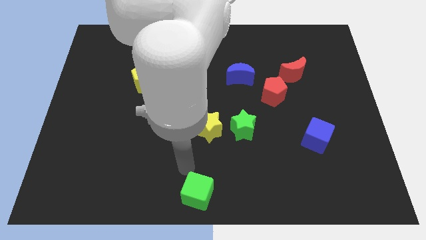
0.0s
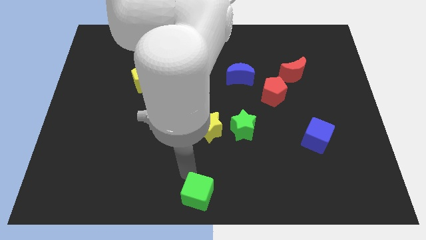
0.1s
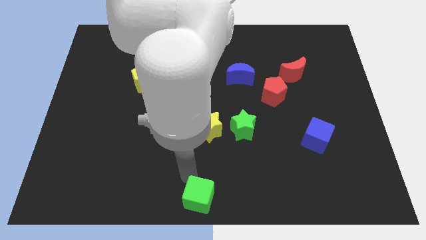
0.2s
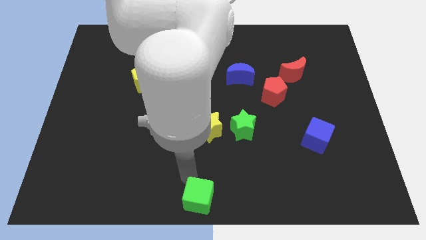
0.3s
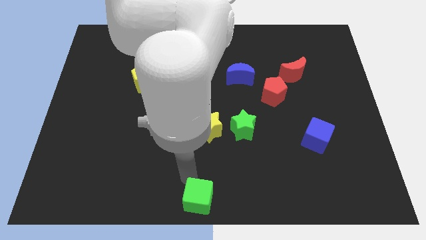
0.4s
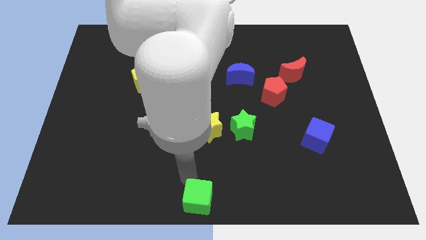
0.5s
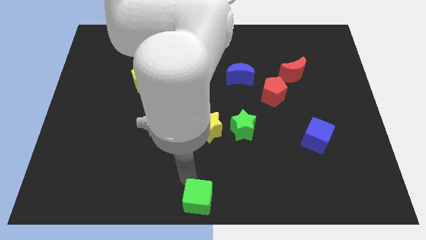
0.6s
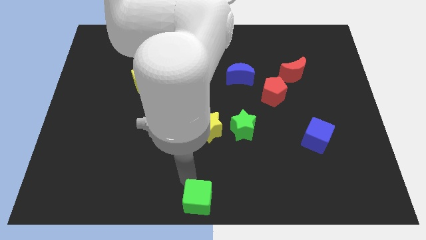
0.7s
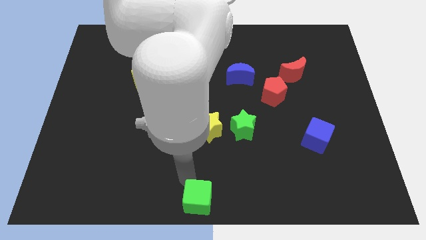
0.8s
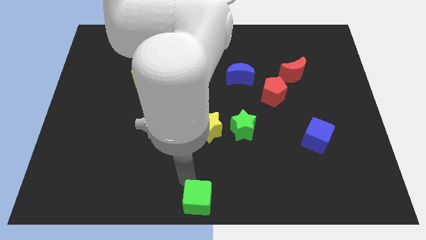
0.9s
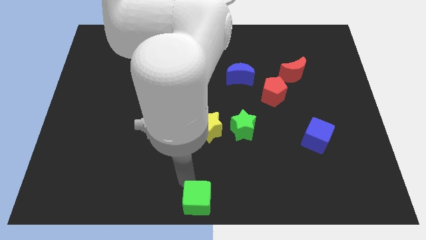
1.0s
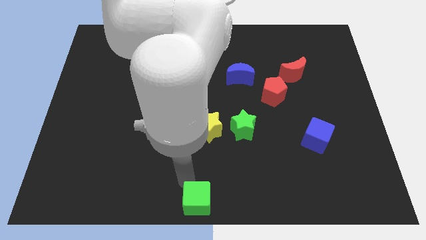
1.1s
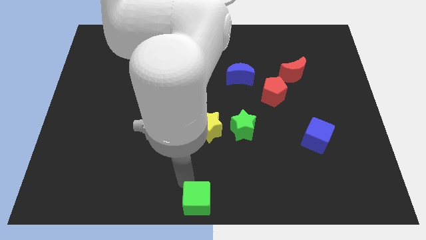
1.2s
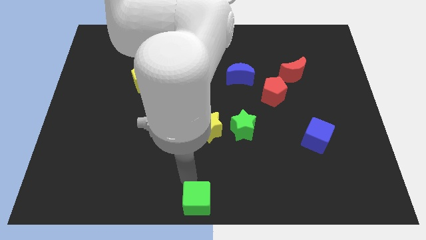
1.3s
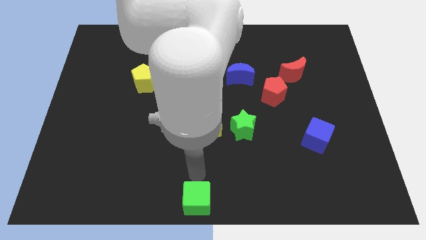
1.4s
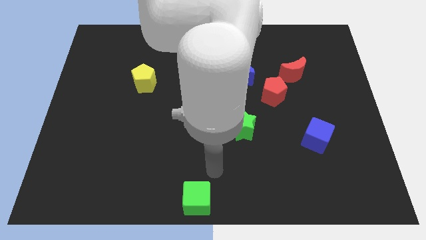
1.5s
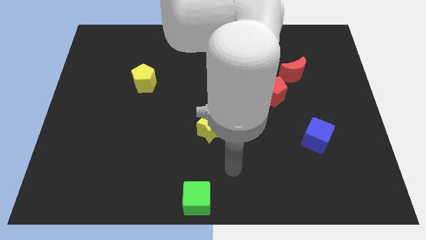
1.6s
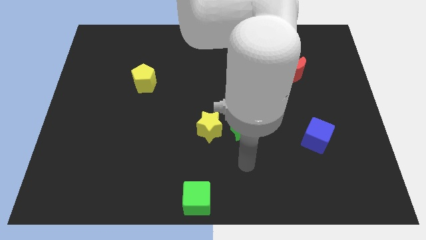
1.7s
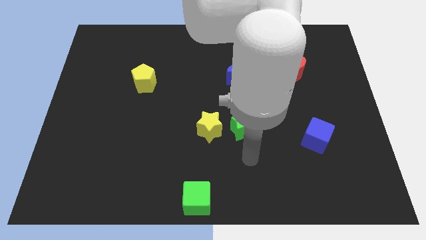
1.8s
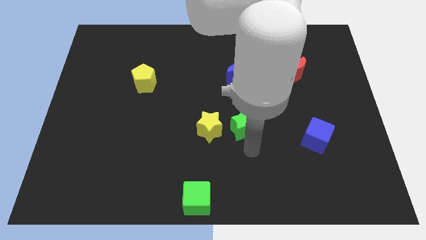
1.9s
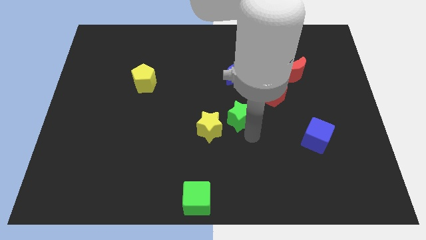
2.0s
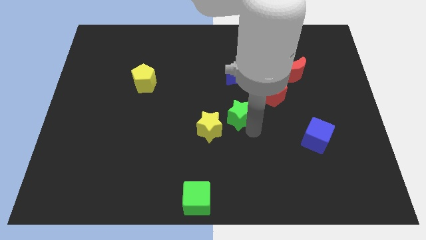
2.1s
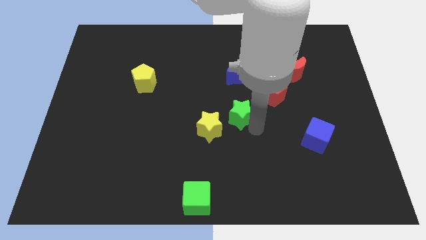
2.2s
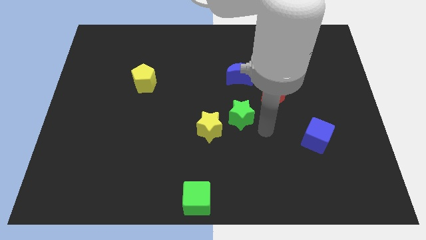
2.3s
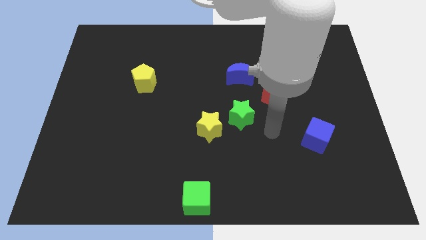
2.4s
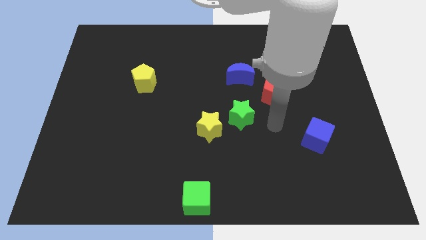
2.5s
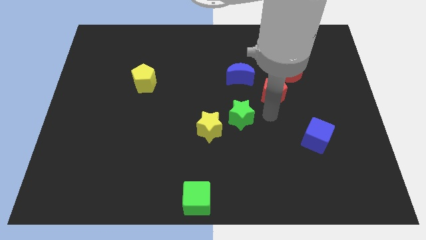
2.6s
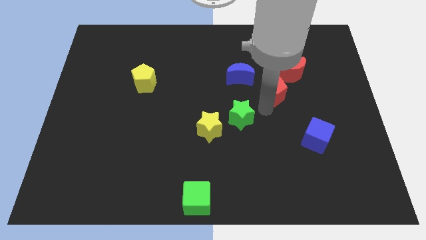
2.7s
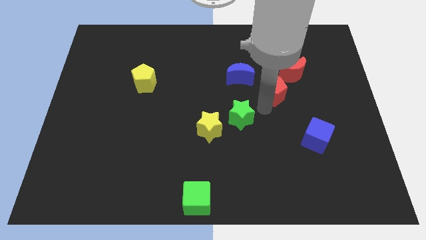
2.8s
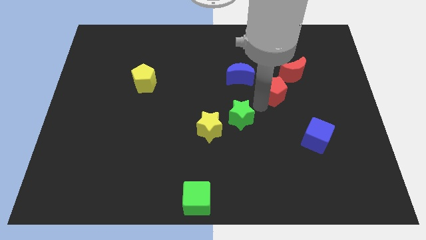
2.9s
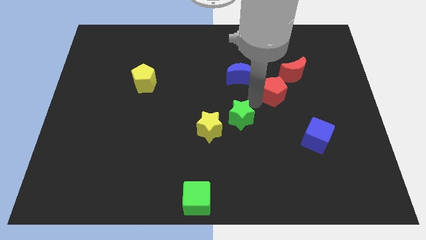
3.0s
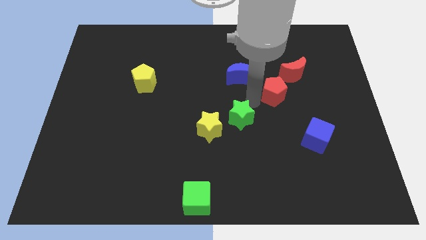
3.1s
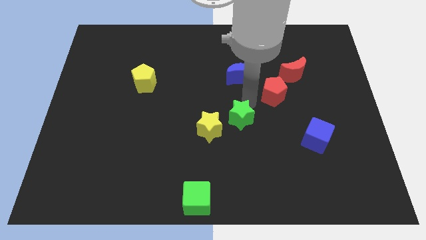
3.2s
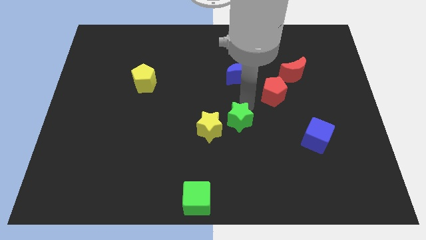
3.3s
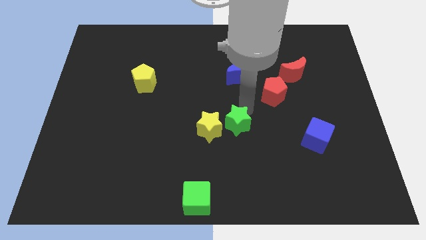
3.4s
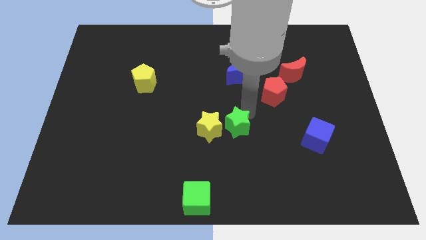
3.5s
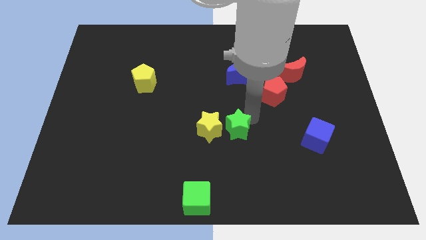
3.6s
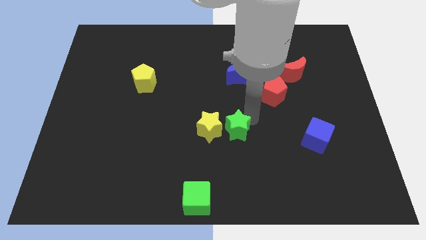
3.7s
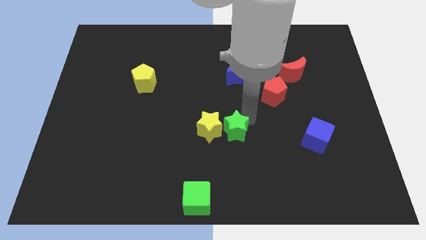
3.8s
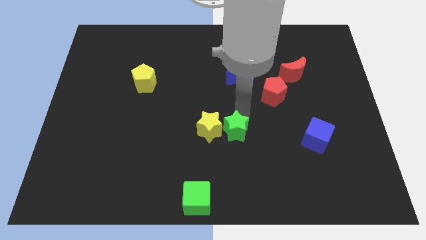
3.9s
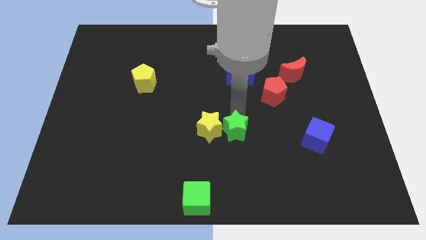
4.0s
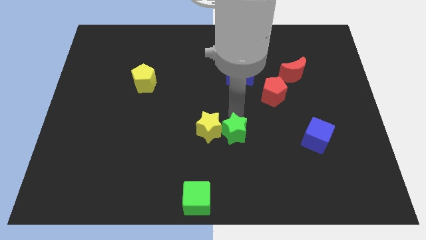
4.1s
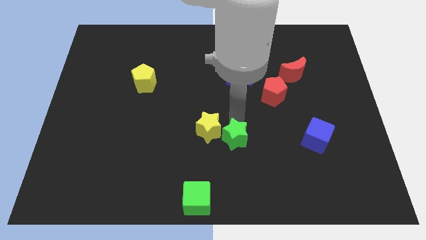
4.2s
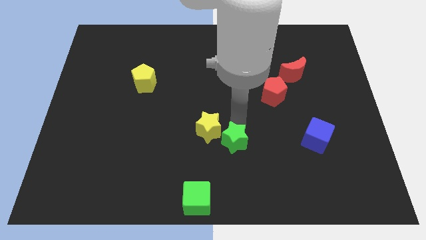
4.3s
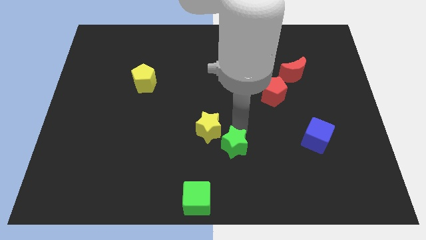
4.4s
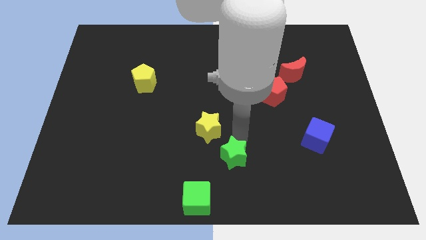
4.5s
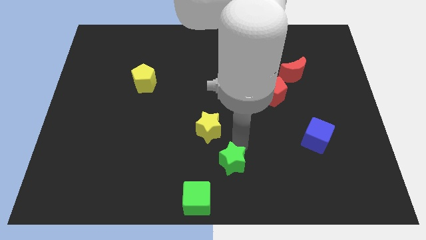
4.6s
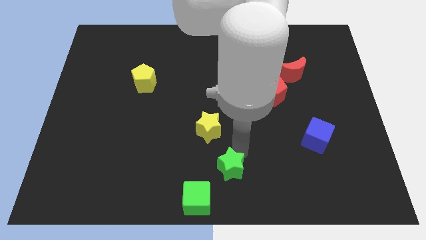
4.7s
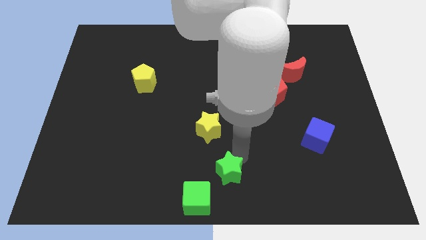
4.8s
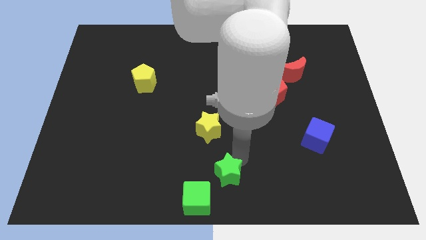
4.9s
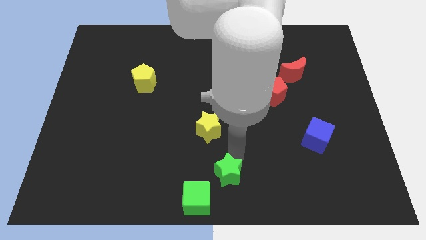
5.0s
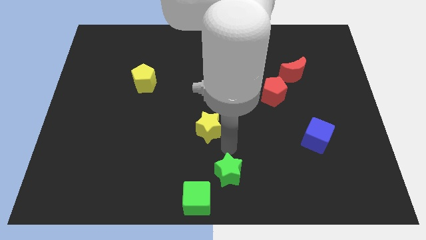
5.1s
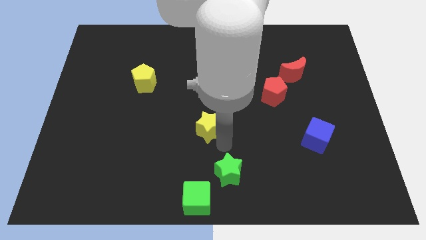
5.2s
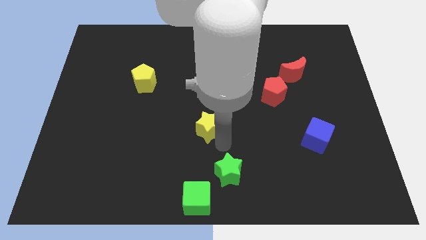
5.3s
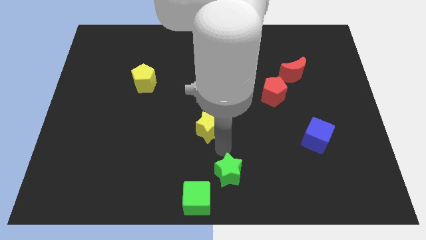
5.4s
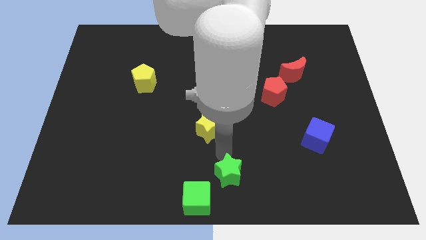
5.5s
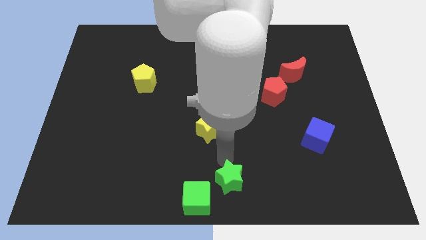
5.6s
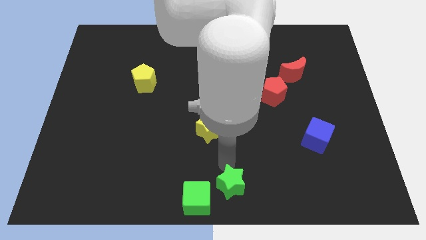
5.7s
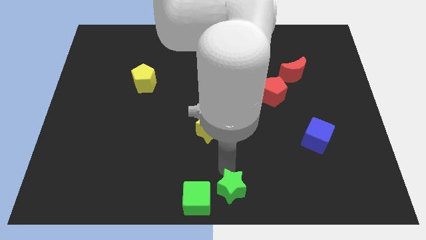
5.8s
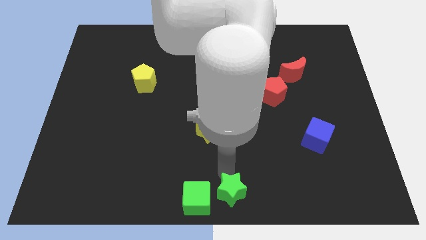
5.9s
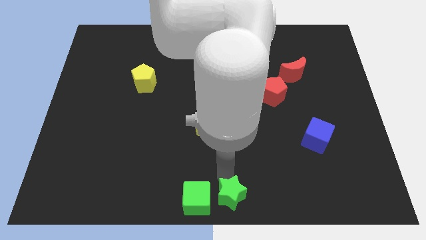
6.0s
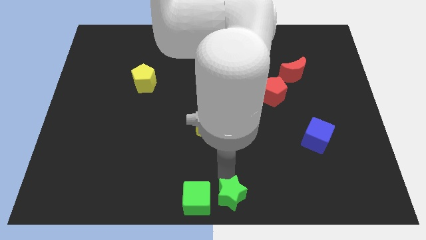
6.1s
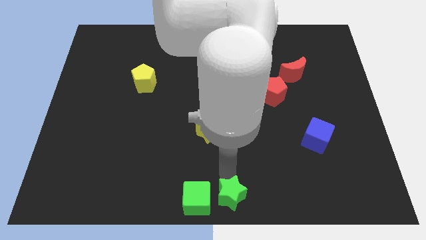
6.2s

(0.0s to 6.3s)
place green star to the right of green cube

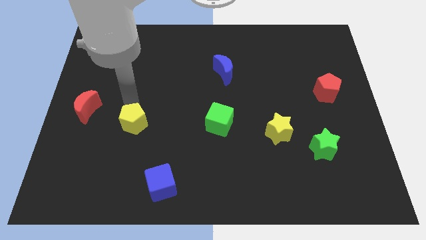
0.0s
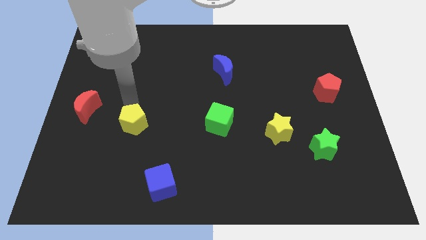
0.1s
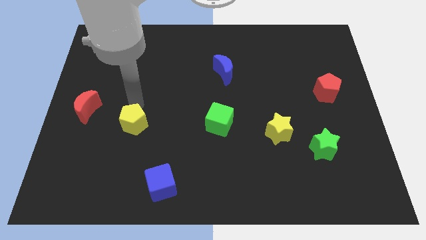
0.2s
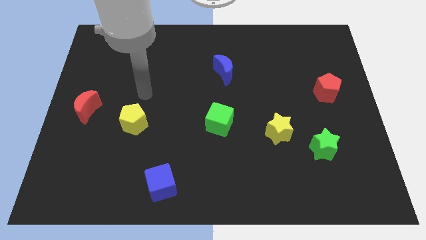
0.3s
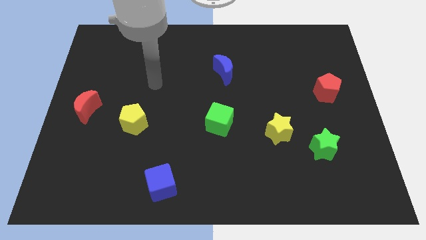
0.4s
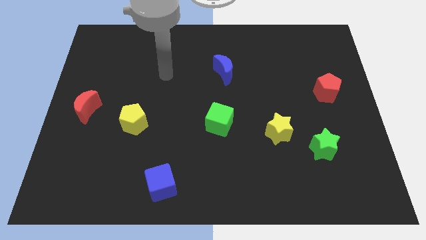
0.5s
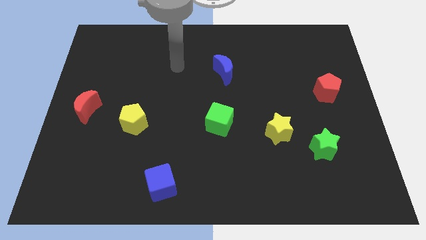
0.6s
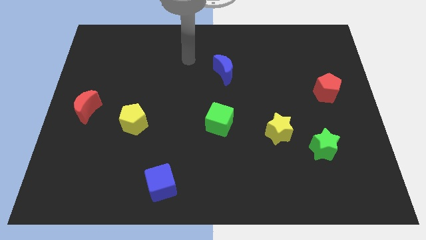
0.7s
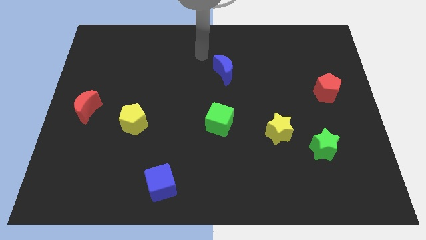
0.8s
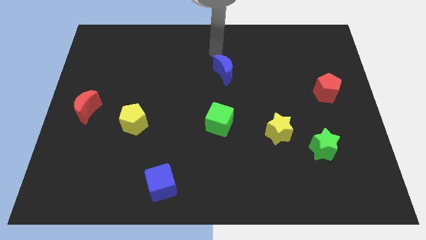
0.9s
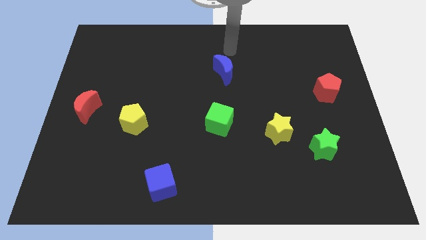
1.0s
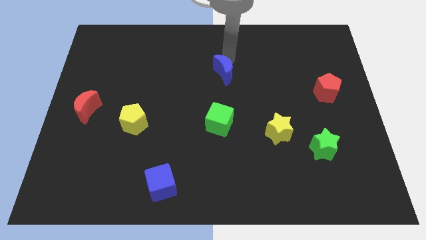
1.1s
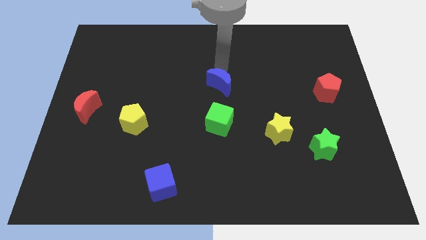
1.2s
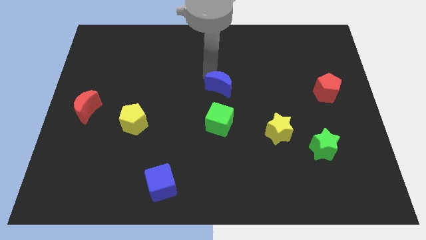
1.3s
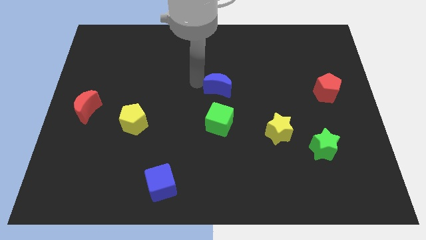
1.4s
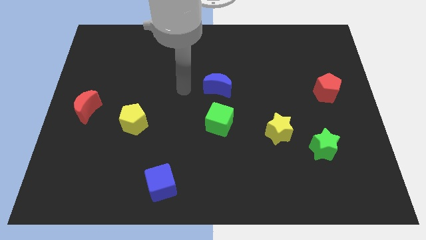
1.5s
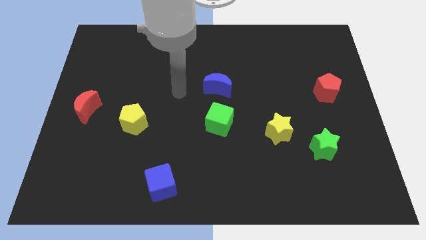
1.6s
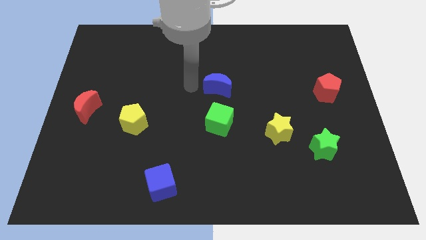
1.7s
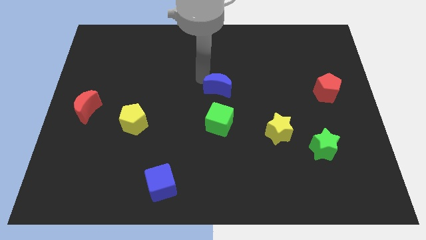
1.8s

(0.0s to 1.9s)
push the blue crescent into green cube

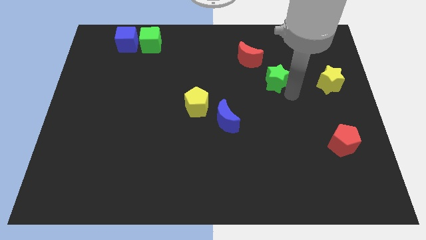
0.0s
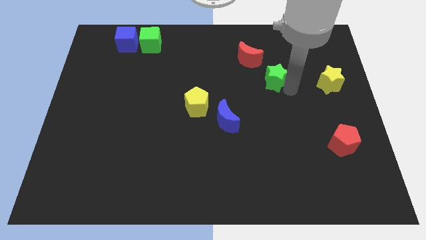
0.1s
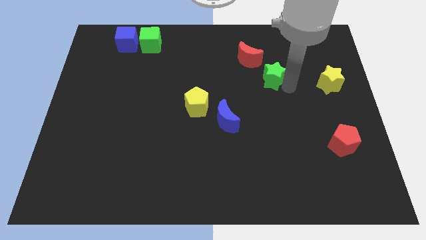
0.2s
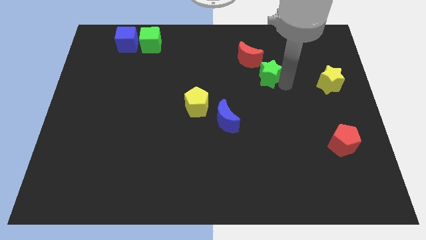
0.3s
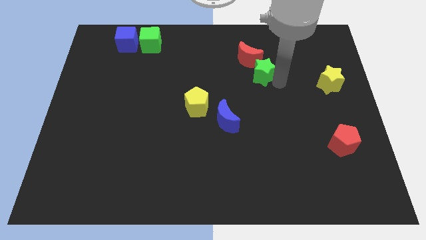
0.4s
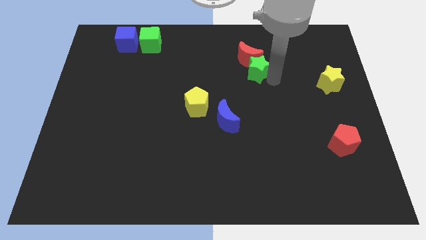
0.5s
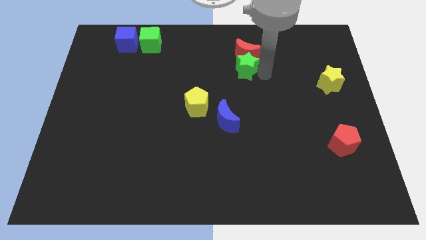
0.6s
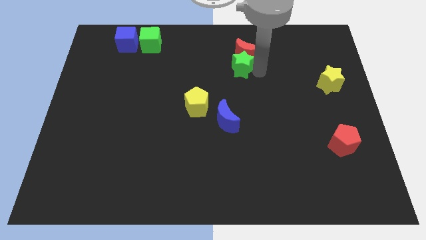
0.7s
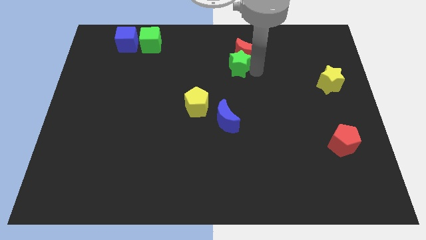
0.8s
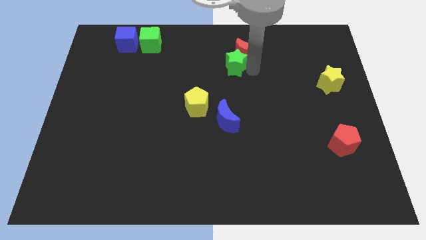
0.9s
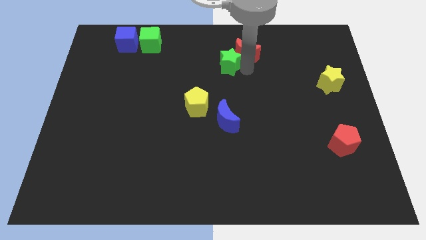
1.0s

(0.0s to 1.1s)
slide green star into red moon
